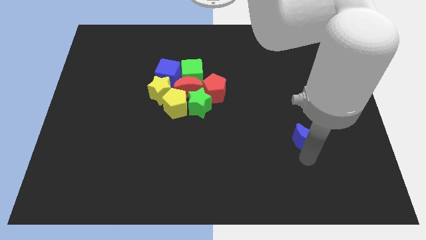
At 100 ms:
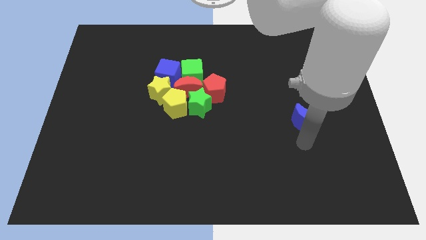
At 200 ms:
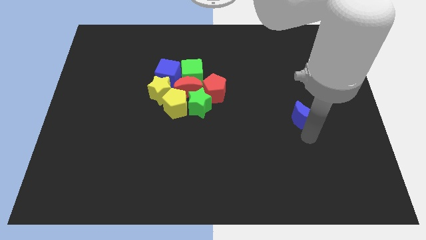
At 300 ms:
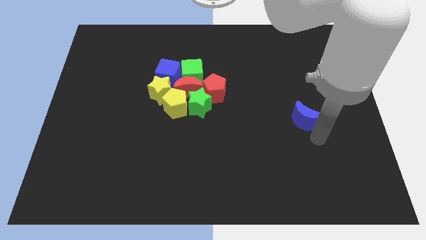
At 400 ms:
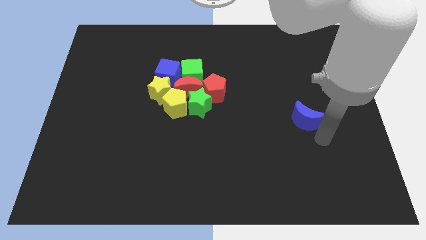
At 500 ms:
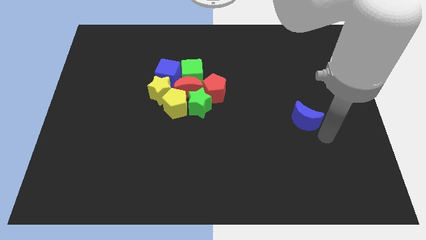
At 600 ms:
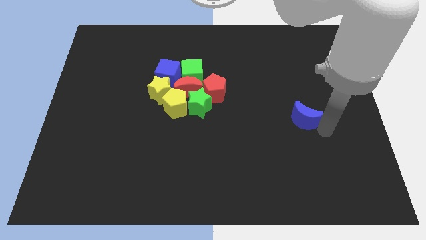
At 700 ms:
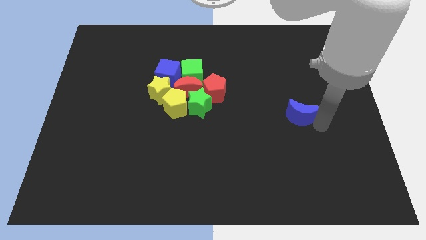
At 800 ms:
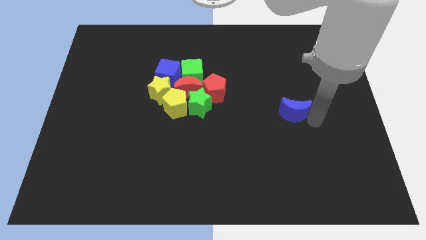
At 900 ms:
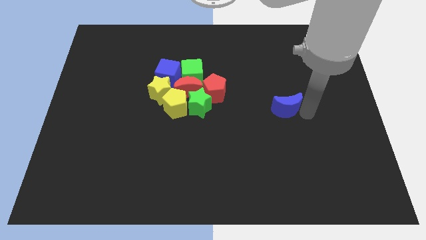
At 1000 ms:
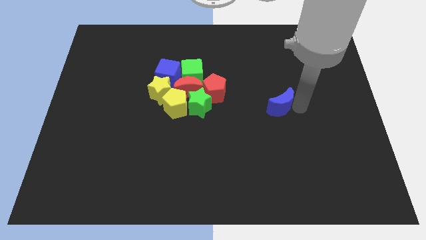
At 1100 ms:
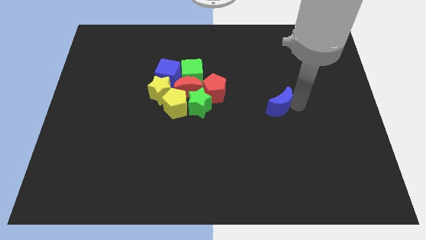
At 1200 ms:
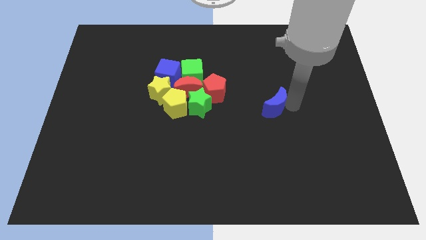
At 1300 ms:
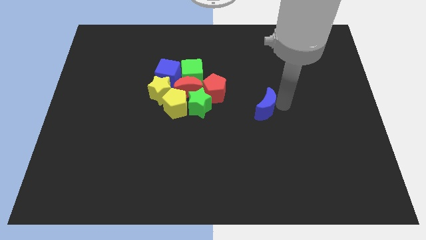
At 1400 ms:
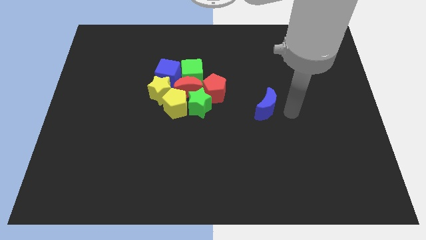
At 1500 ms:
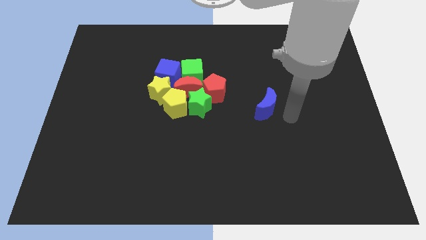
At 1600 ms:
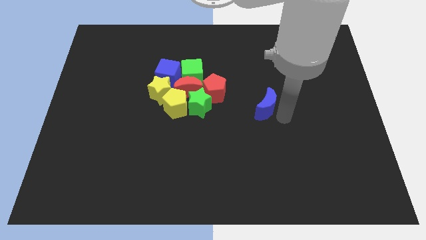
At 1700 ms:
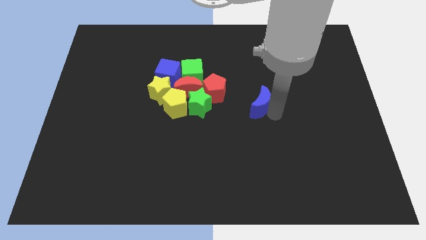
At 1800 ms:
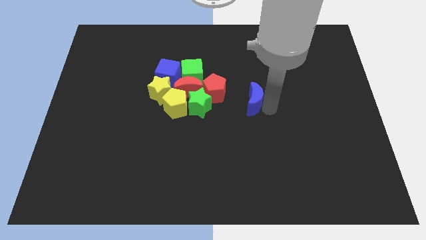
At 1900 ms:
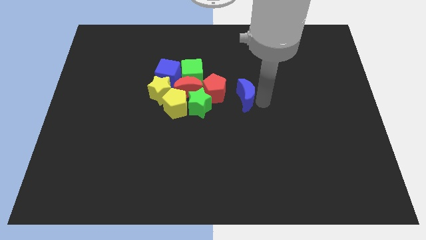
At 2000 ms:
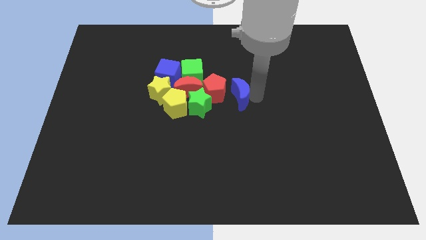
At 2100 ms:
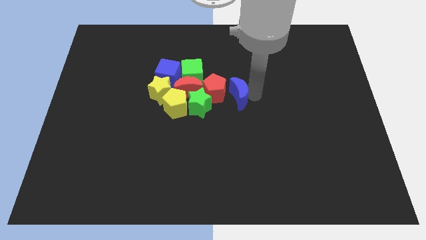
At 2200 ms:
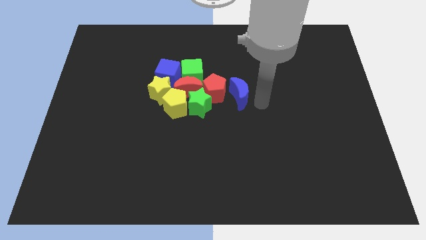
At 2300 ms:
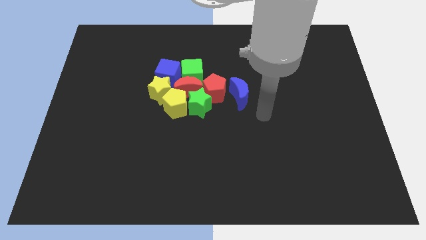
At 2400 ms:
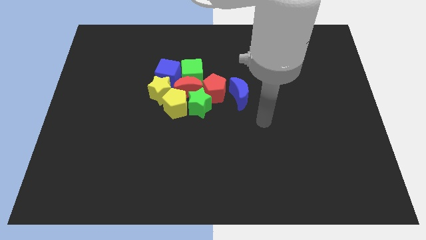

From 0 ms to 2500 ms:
move the blue crescent to the right side of the red pentagon

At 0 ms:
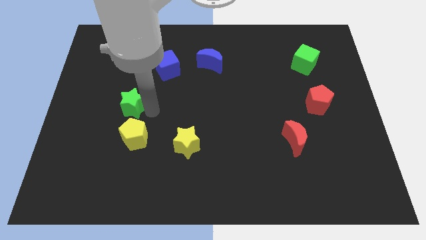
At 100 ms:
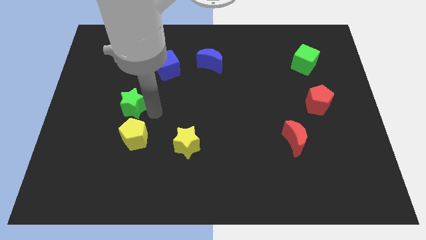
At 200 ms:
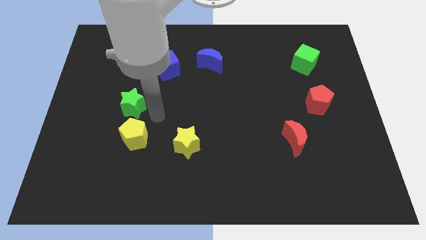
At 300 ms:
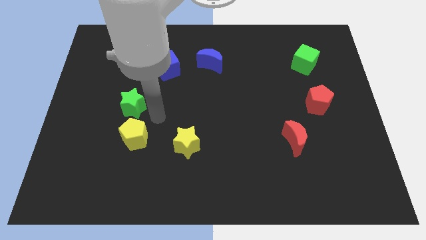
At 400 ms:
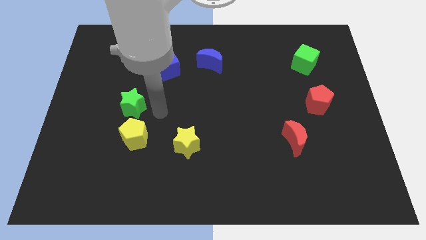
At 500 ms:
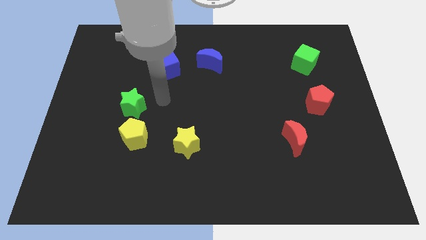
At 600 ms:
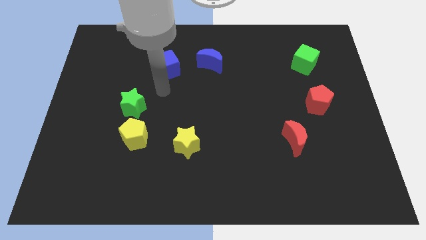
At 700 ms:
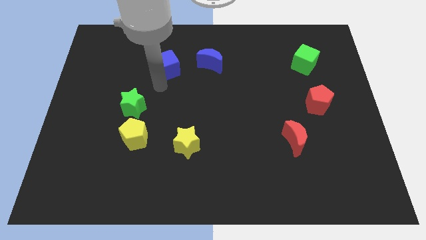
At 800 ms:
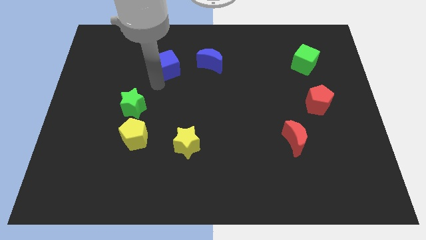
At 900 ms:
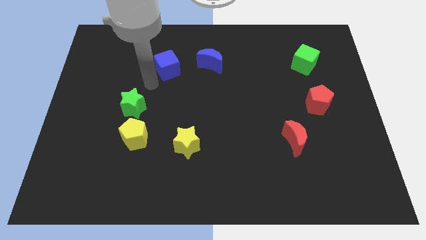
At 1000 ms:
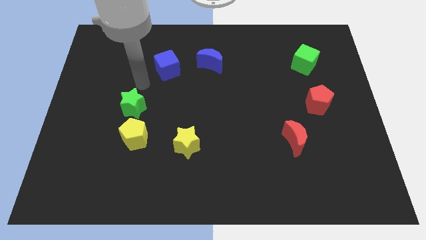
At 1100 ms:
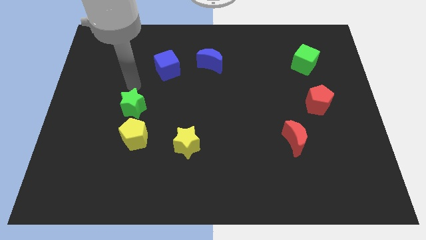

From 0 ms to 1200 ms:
point your hand above the green star

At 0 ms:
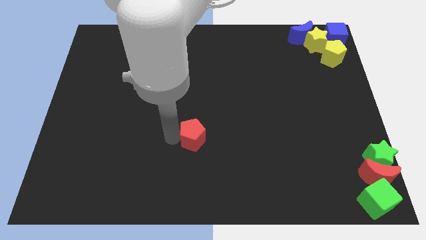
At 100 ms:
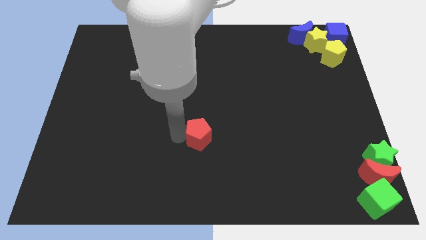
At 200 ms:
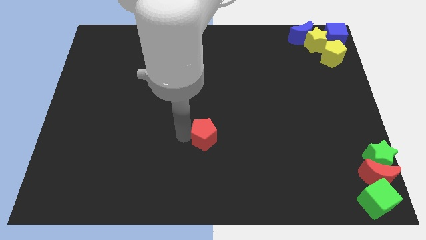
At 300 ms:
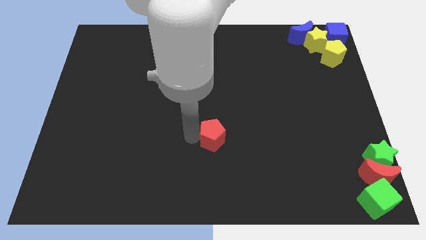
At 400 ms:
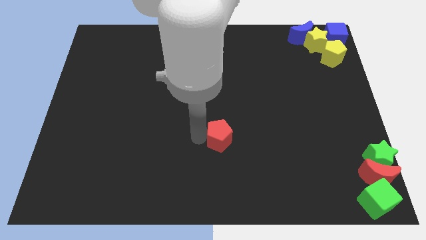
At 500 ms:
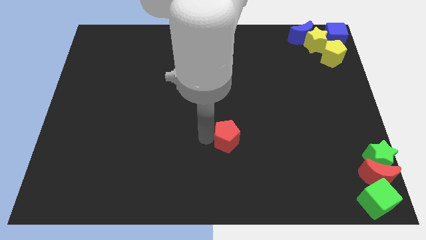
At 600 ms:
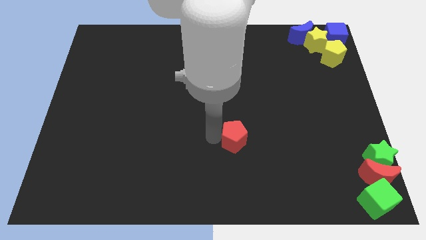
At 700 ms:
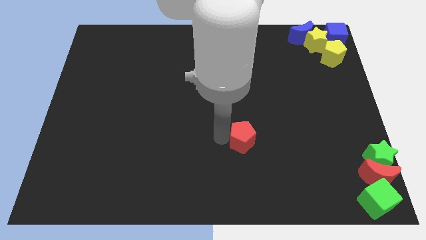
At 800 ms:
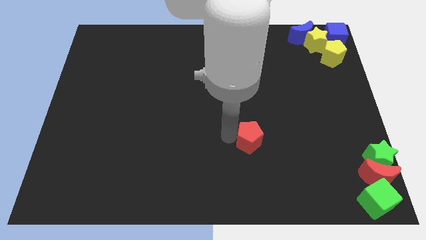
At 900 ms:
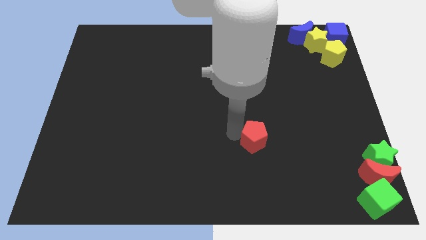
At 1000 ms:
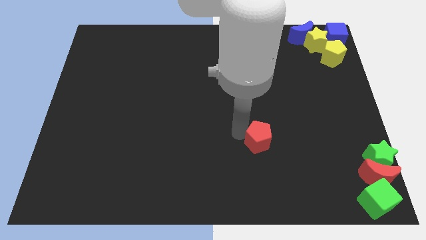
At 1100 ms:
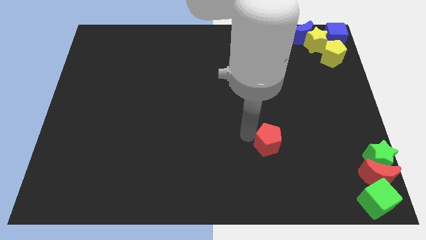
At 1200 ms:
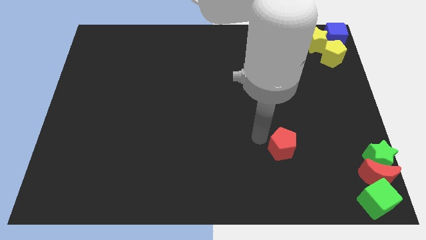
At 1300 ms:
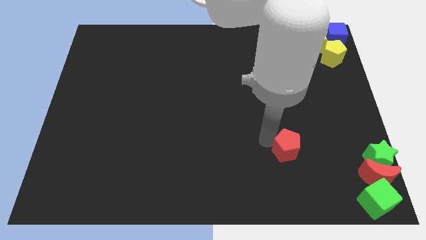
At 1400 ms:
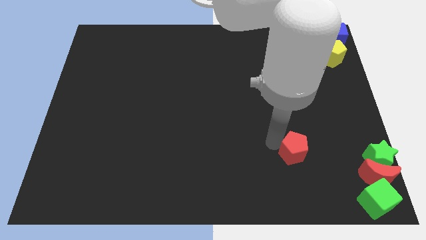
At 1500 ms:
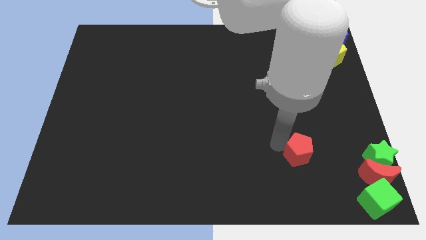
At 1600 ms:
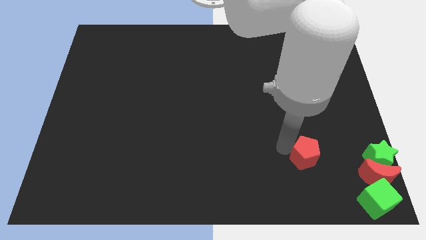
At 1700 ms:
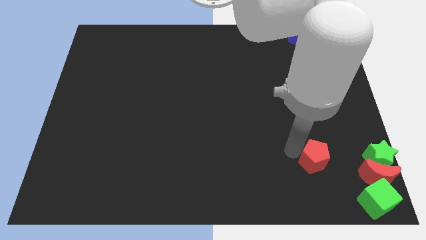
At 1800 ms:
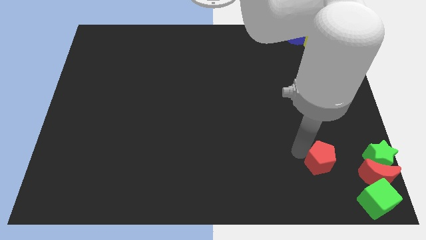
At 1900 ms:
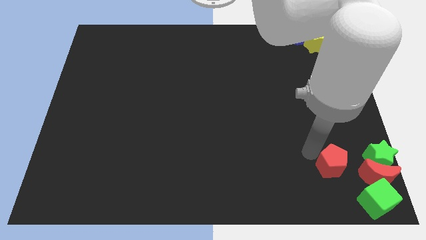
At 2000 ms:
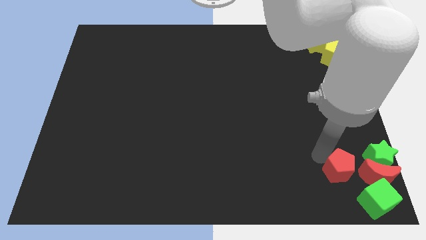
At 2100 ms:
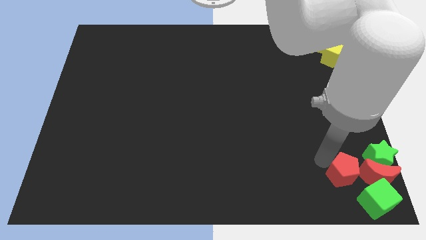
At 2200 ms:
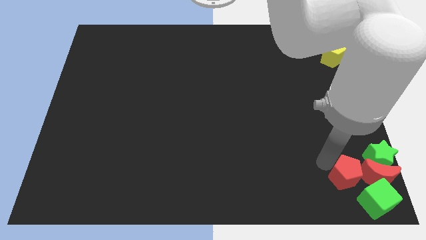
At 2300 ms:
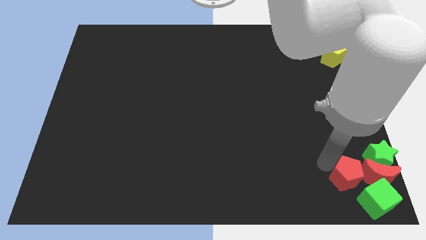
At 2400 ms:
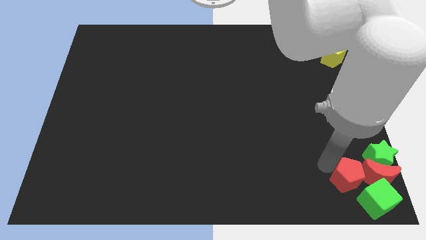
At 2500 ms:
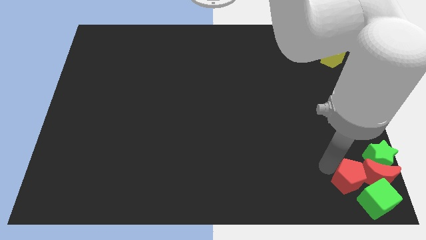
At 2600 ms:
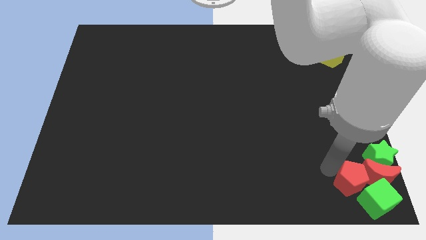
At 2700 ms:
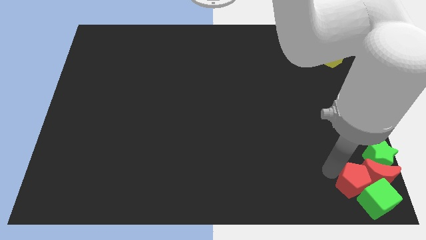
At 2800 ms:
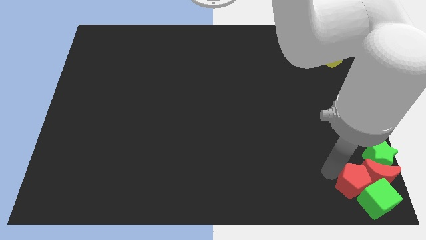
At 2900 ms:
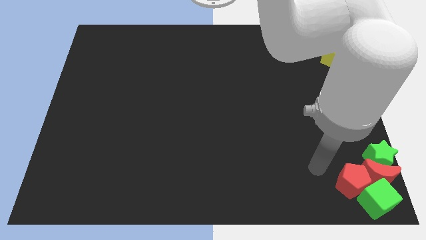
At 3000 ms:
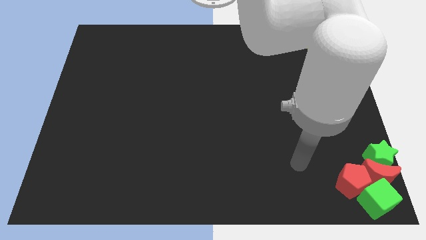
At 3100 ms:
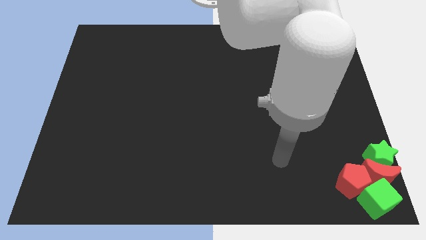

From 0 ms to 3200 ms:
push the red pentagon into the red crescent

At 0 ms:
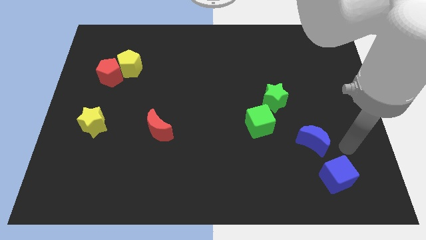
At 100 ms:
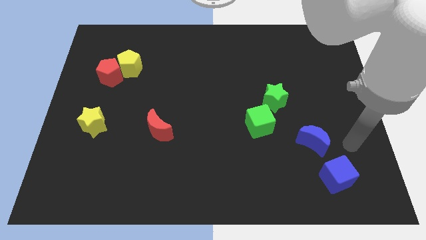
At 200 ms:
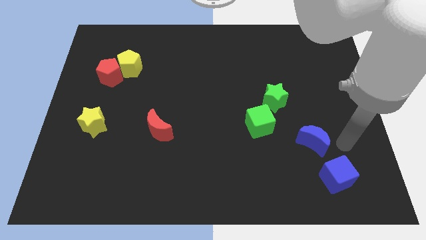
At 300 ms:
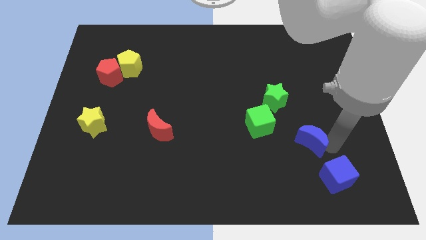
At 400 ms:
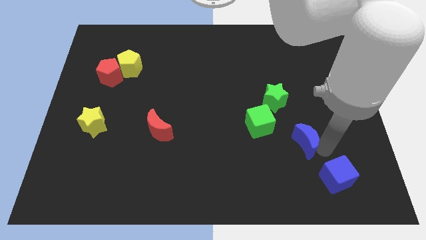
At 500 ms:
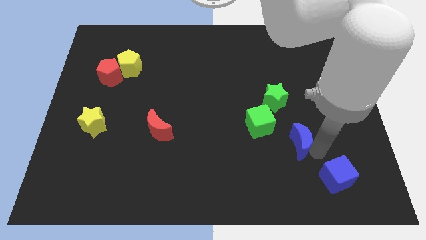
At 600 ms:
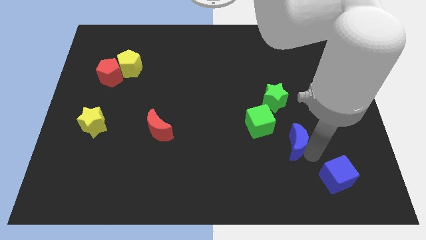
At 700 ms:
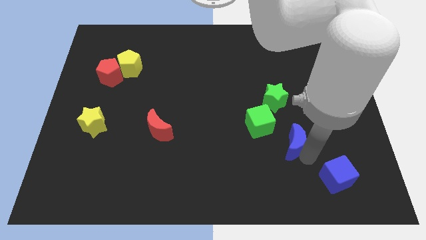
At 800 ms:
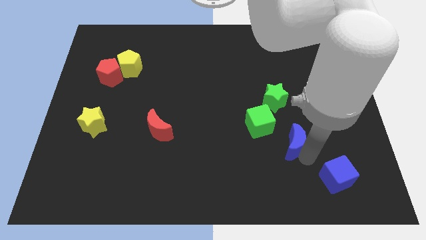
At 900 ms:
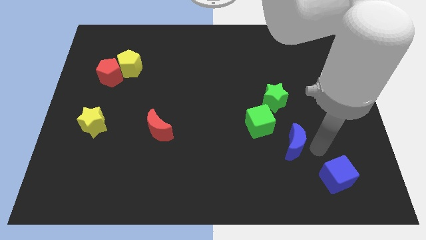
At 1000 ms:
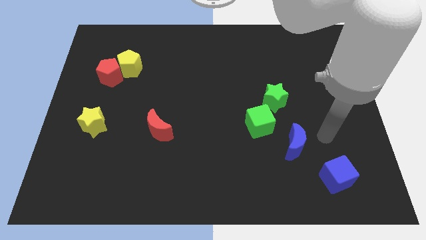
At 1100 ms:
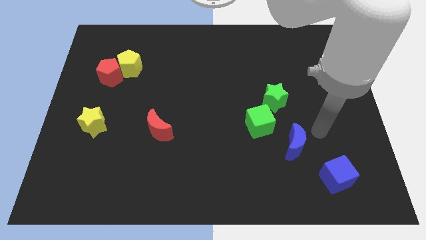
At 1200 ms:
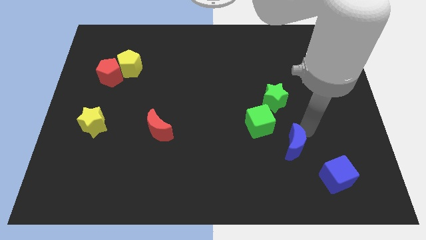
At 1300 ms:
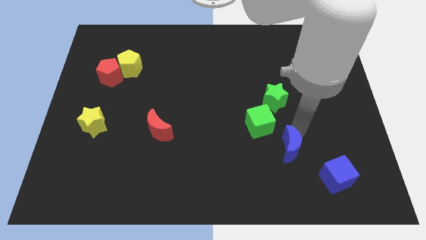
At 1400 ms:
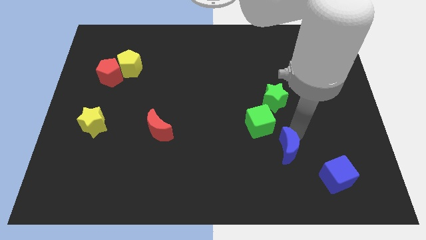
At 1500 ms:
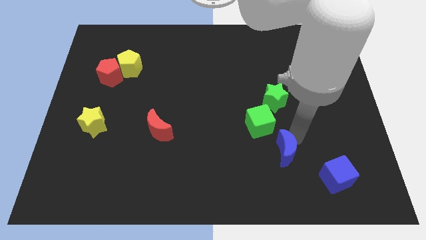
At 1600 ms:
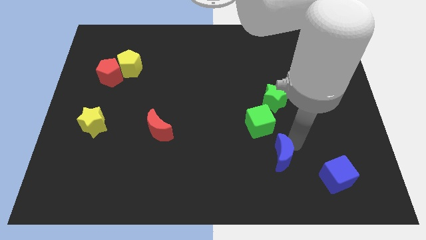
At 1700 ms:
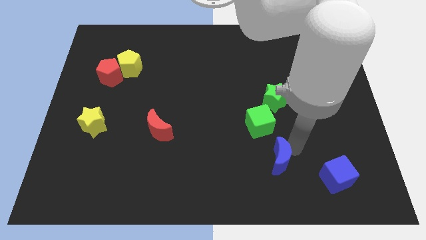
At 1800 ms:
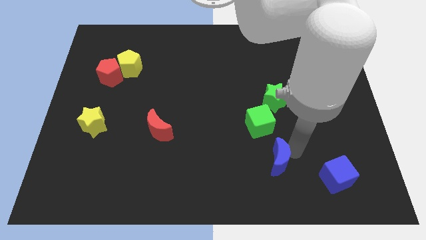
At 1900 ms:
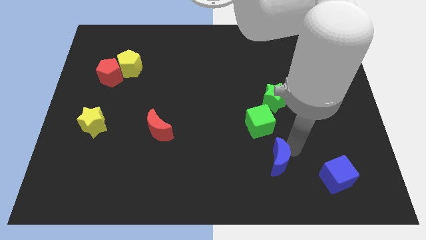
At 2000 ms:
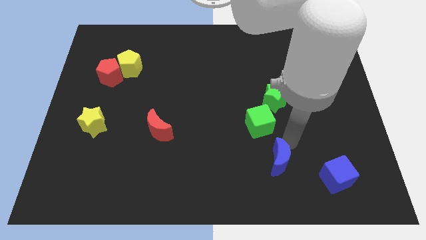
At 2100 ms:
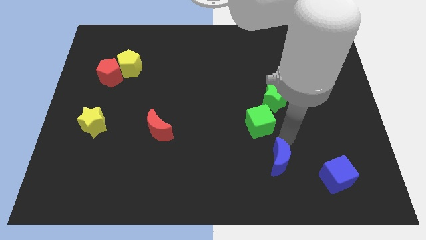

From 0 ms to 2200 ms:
push the blue crescent opposite to the blue crescent
